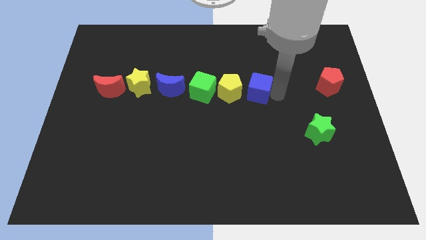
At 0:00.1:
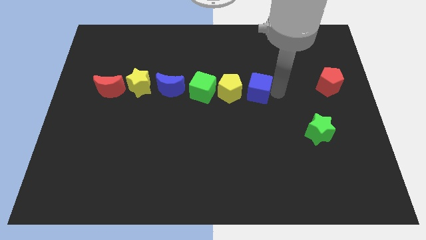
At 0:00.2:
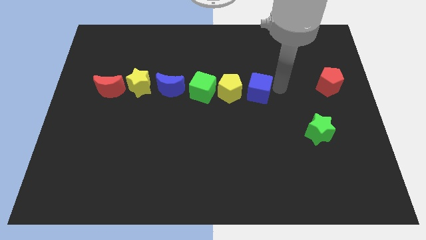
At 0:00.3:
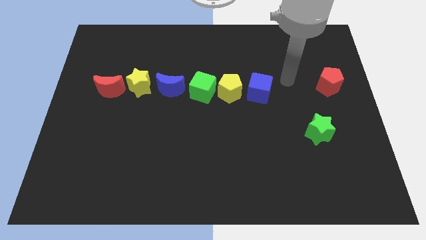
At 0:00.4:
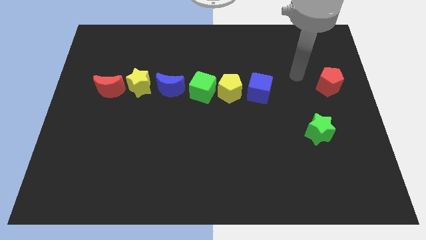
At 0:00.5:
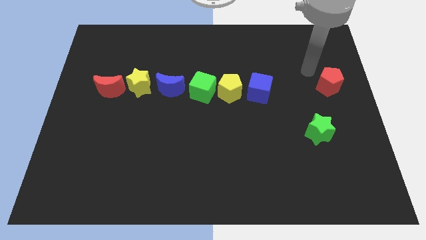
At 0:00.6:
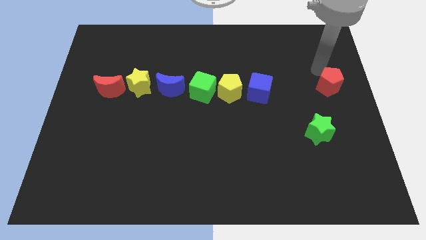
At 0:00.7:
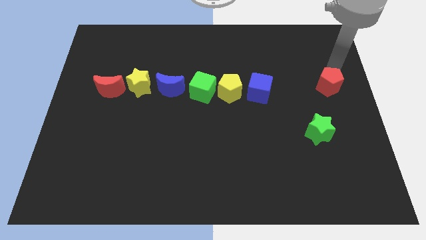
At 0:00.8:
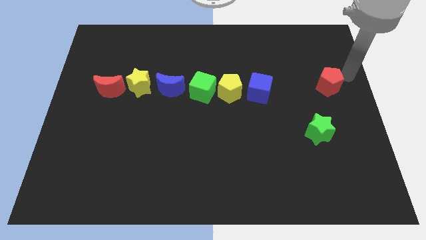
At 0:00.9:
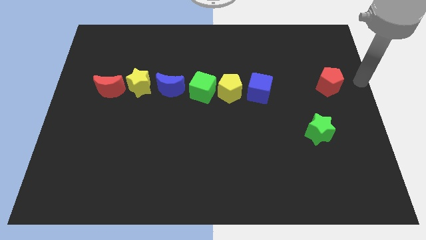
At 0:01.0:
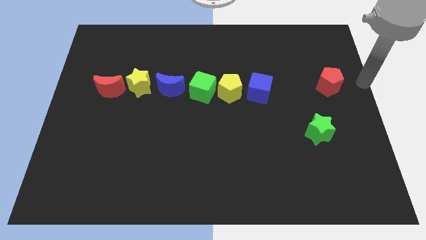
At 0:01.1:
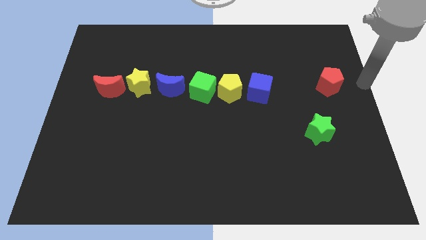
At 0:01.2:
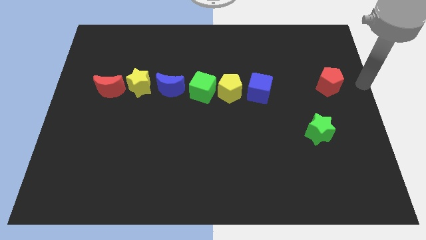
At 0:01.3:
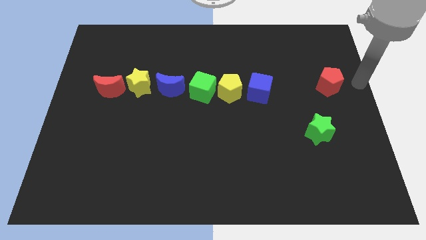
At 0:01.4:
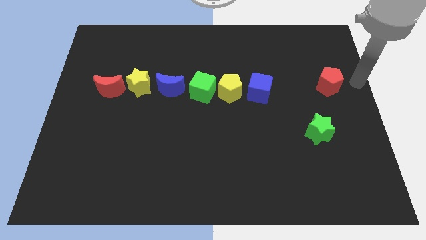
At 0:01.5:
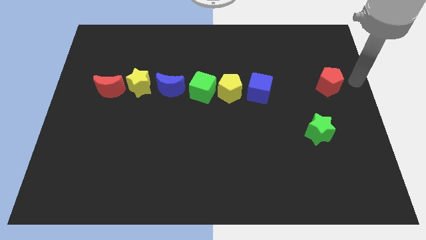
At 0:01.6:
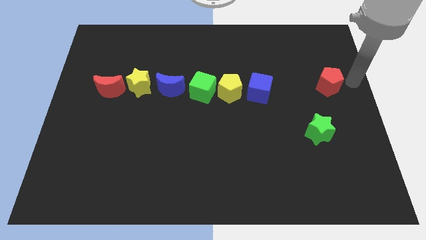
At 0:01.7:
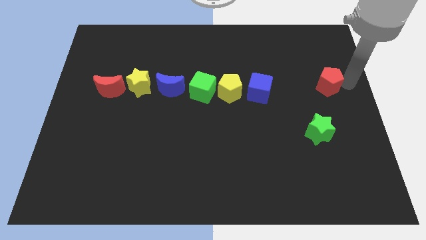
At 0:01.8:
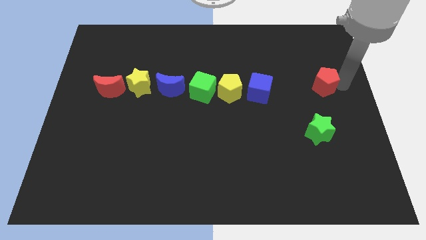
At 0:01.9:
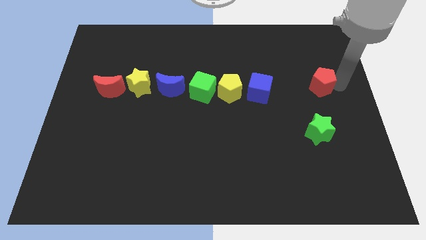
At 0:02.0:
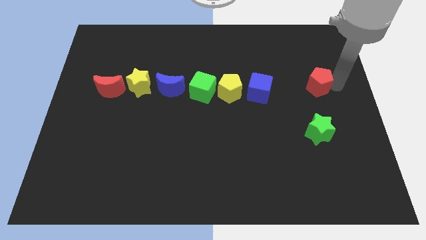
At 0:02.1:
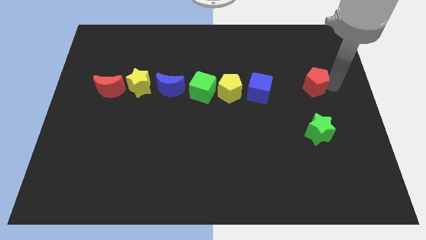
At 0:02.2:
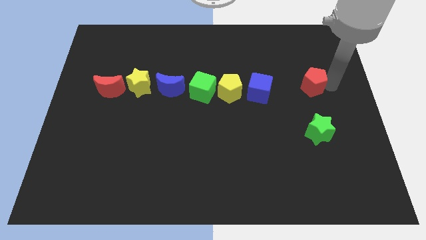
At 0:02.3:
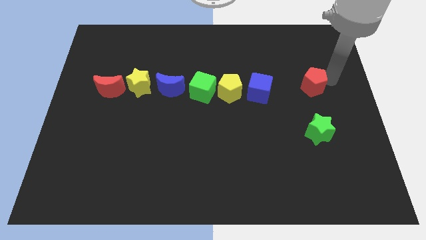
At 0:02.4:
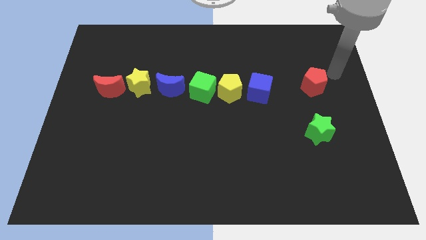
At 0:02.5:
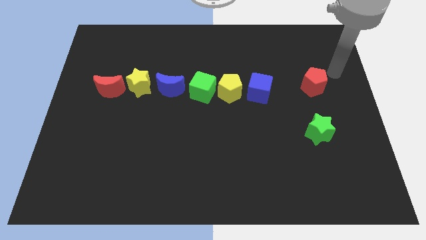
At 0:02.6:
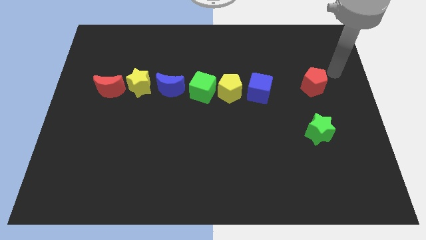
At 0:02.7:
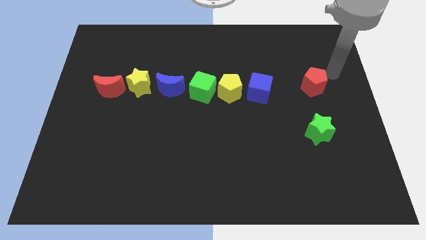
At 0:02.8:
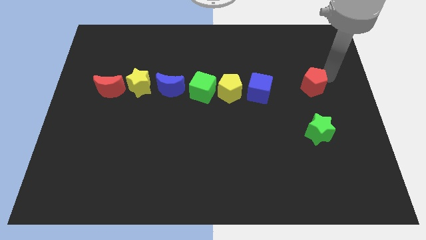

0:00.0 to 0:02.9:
place red pentagon to the top of green star

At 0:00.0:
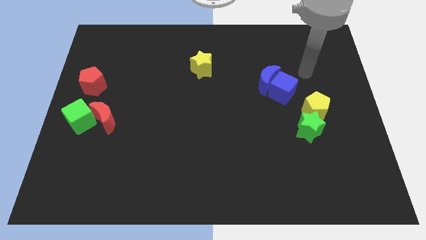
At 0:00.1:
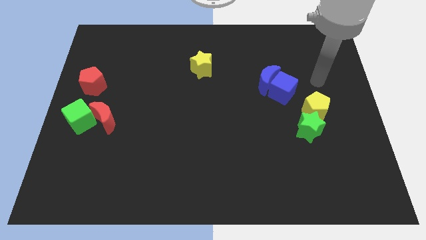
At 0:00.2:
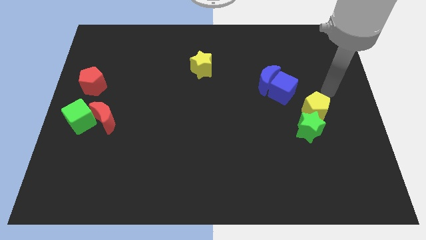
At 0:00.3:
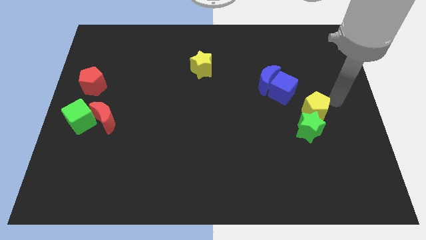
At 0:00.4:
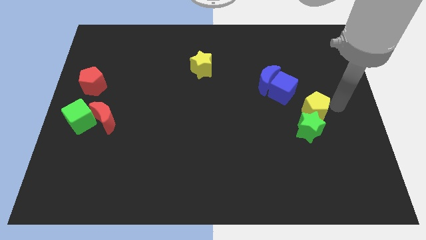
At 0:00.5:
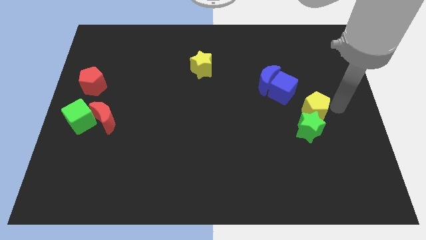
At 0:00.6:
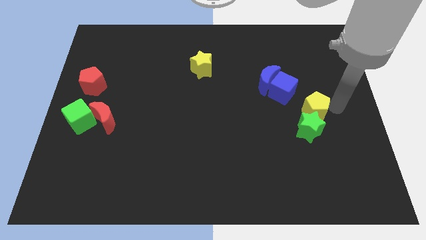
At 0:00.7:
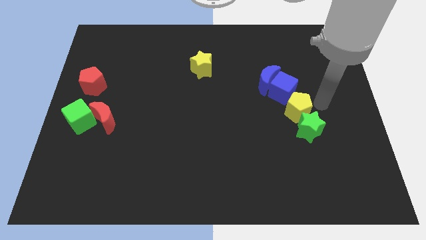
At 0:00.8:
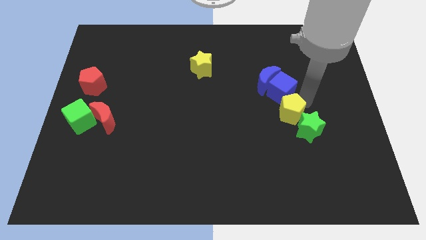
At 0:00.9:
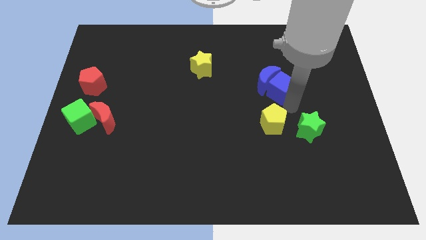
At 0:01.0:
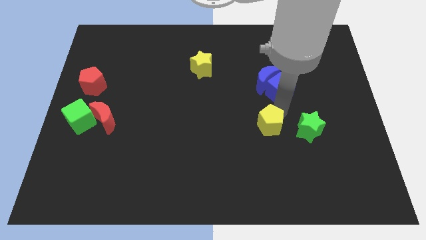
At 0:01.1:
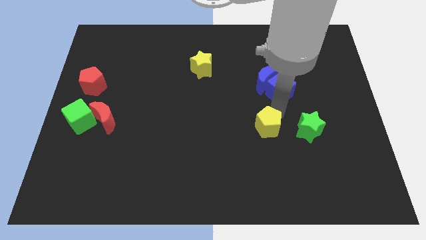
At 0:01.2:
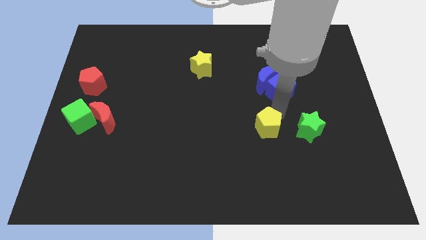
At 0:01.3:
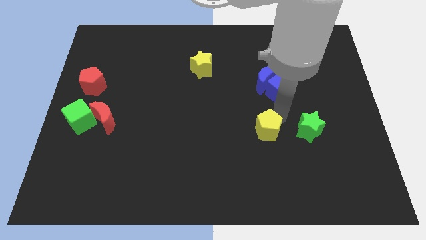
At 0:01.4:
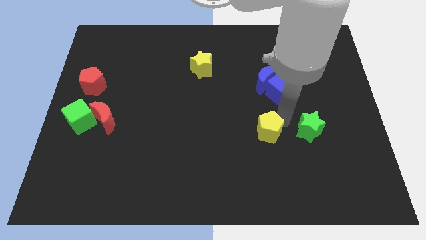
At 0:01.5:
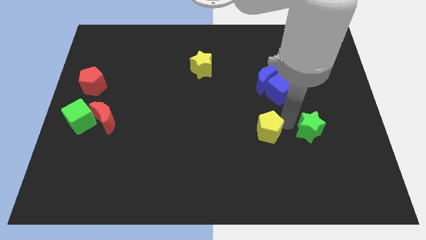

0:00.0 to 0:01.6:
push the yellow pentagon to the left of the green star

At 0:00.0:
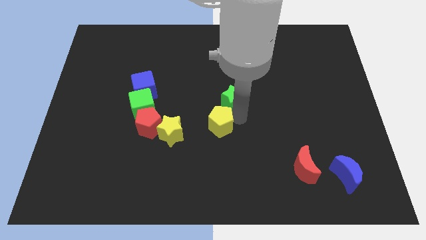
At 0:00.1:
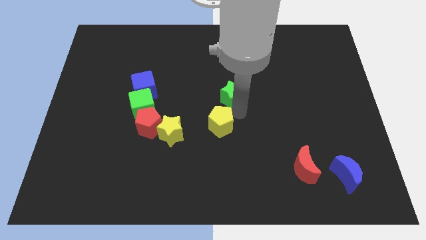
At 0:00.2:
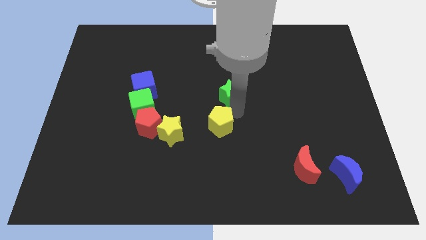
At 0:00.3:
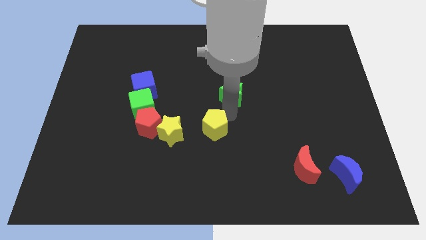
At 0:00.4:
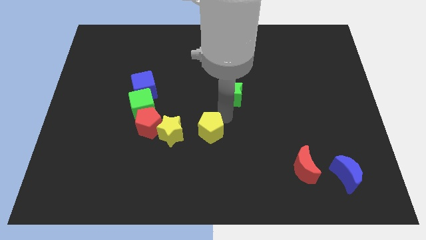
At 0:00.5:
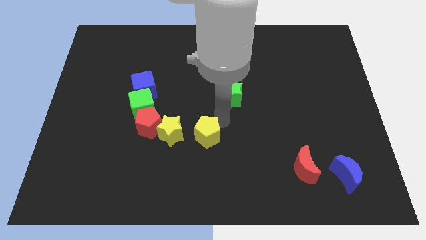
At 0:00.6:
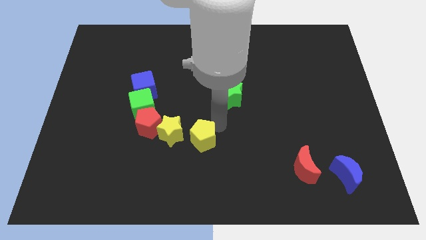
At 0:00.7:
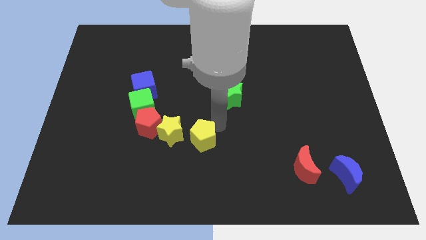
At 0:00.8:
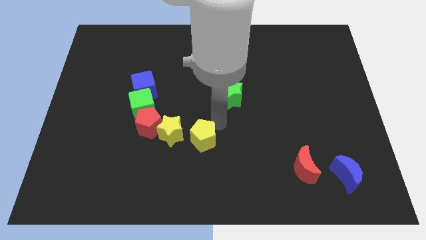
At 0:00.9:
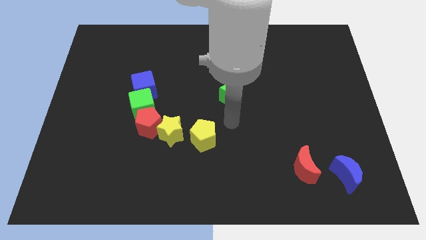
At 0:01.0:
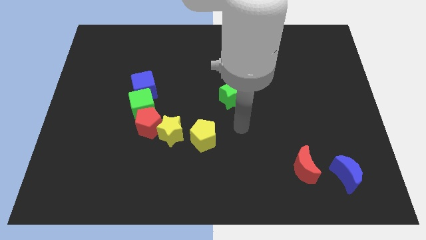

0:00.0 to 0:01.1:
separate yellow pentagon and green star from each other

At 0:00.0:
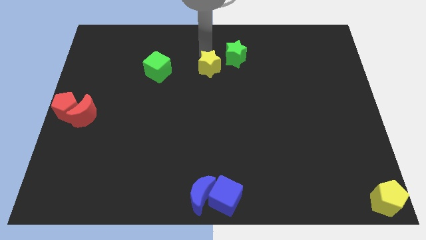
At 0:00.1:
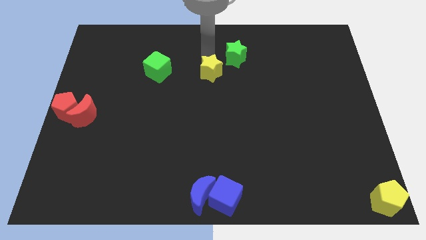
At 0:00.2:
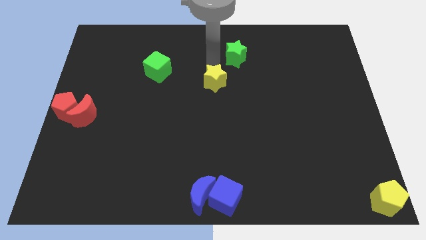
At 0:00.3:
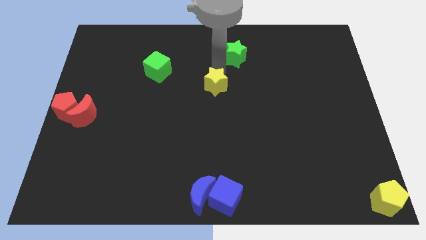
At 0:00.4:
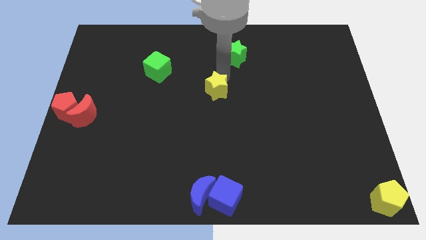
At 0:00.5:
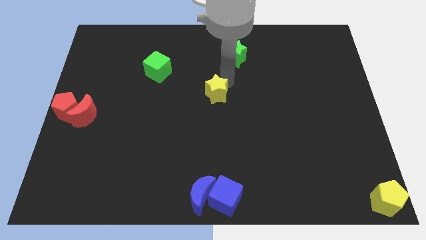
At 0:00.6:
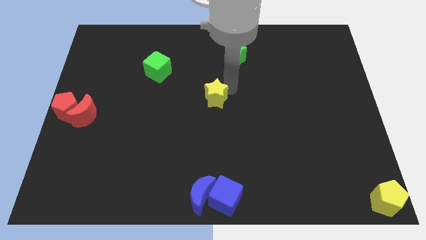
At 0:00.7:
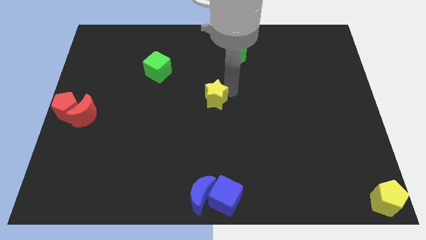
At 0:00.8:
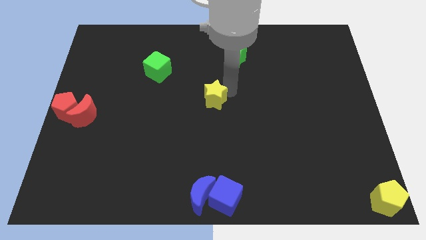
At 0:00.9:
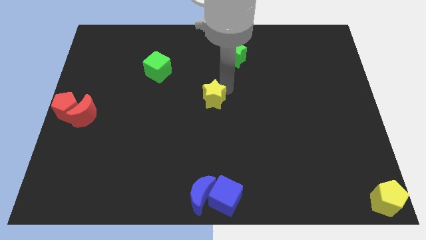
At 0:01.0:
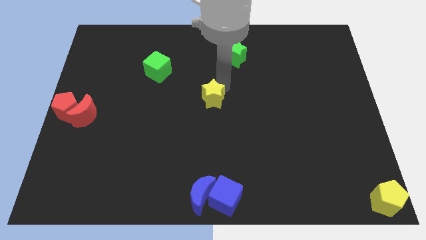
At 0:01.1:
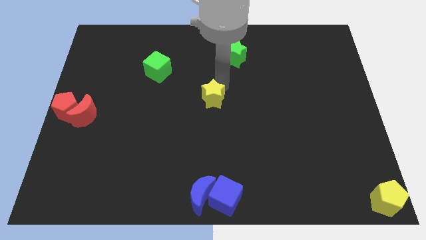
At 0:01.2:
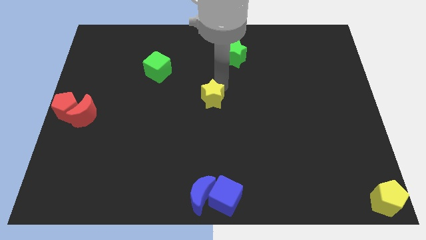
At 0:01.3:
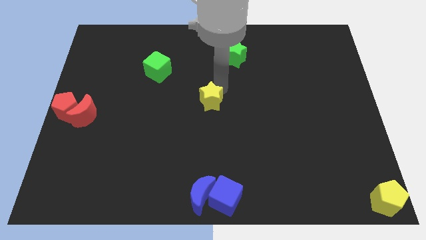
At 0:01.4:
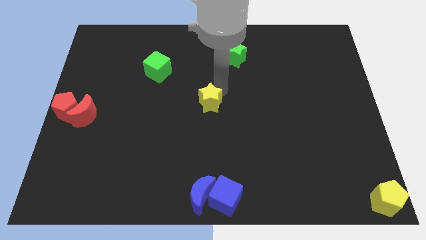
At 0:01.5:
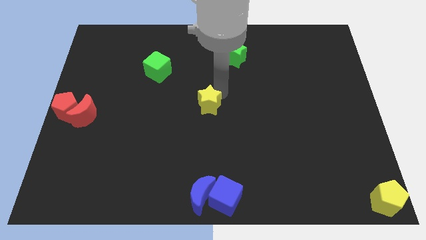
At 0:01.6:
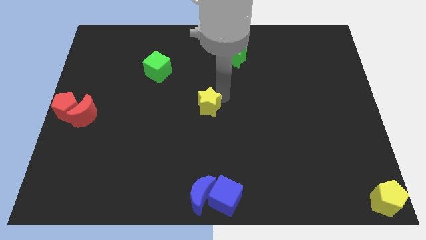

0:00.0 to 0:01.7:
push the yellow star to the center of the board

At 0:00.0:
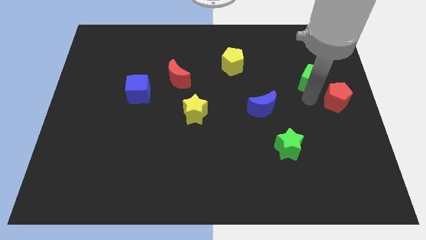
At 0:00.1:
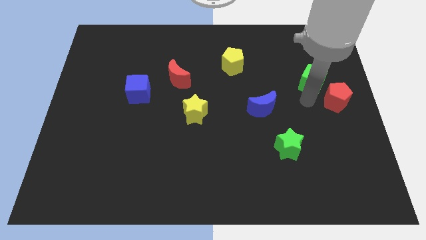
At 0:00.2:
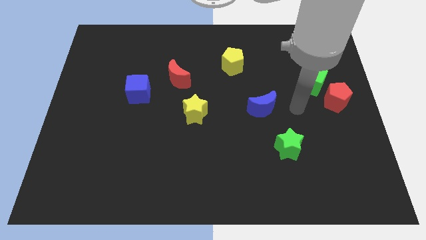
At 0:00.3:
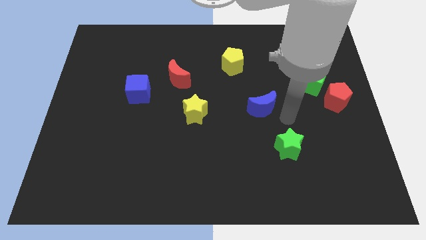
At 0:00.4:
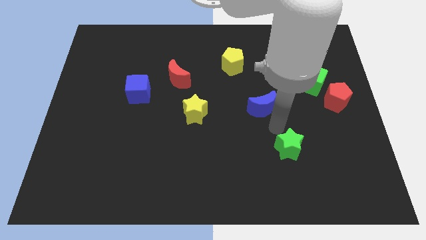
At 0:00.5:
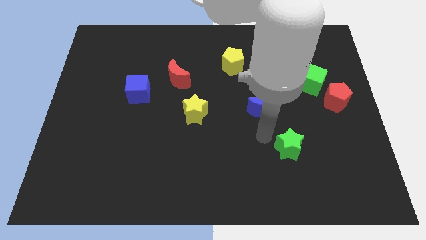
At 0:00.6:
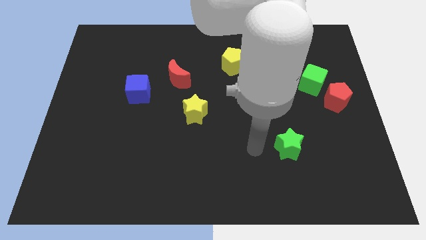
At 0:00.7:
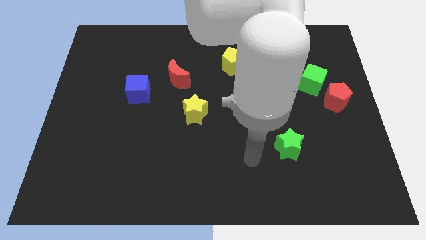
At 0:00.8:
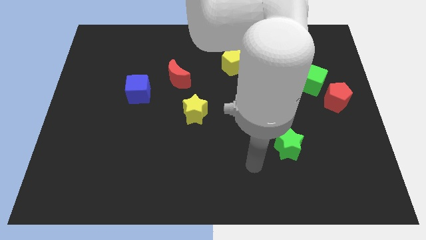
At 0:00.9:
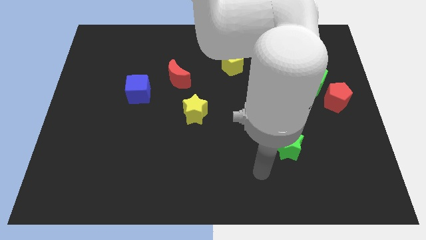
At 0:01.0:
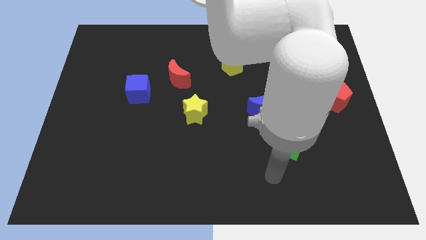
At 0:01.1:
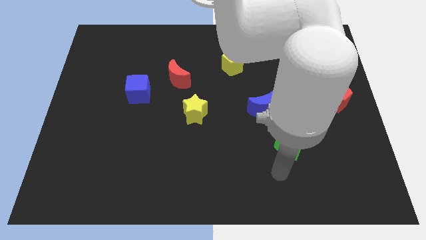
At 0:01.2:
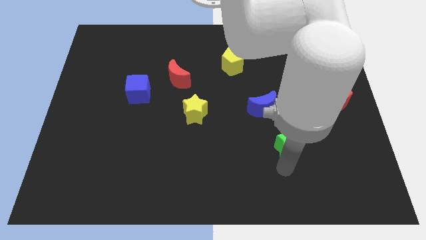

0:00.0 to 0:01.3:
place your arm at the bottom left side of green star

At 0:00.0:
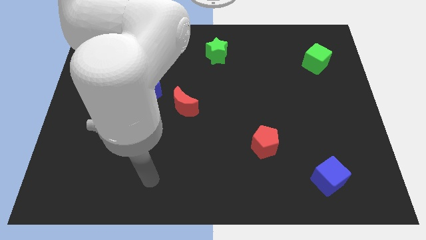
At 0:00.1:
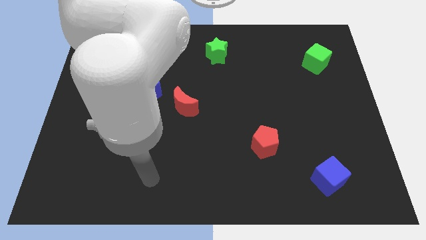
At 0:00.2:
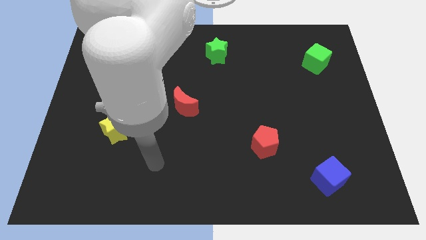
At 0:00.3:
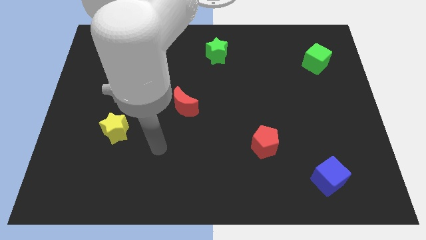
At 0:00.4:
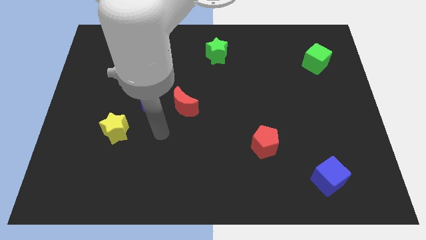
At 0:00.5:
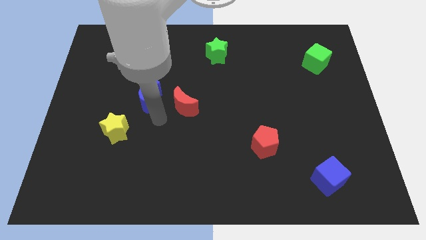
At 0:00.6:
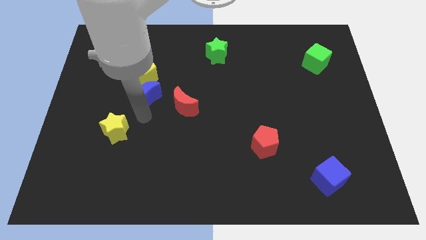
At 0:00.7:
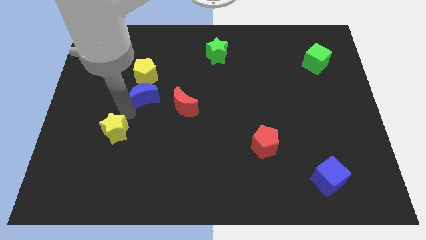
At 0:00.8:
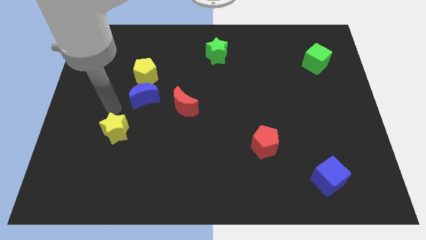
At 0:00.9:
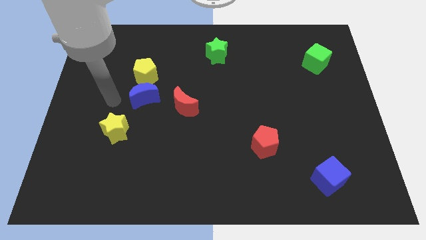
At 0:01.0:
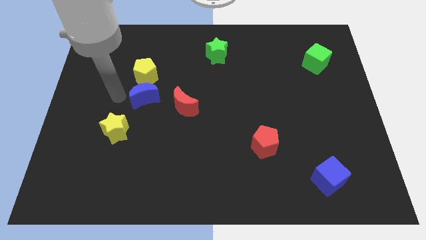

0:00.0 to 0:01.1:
tap the blue moon
